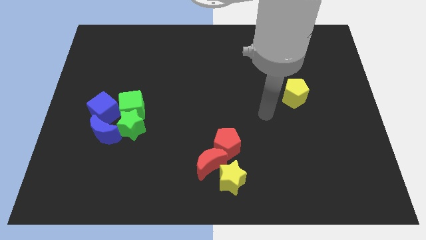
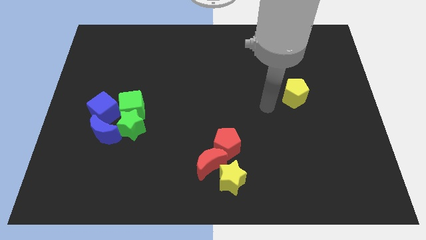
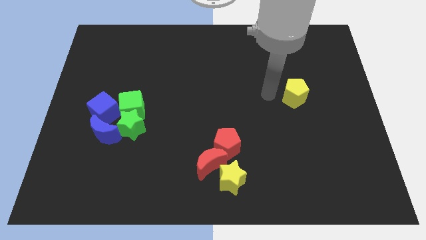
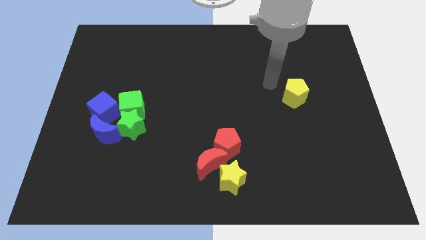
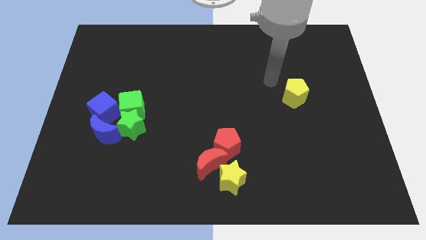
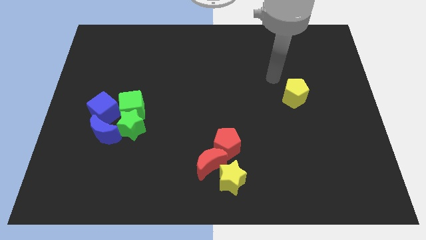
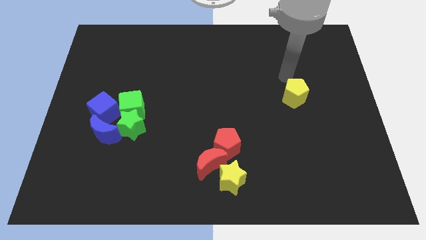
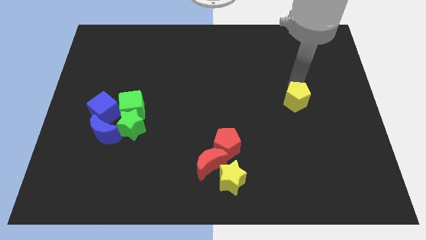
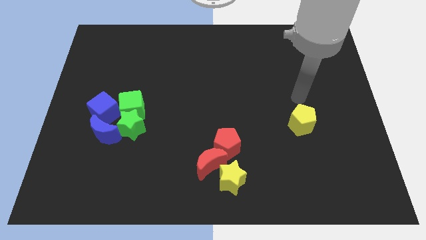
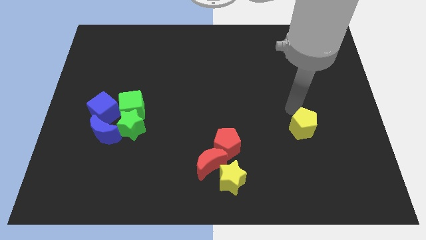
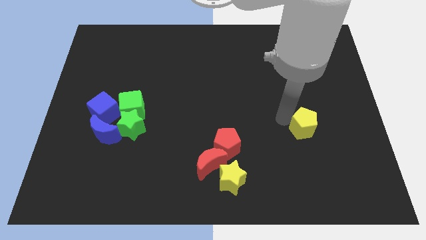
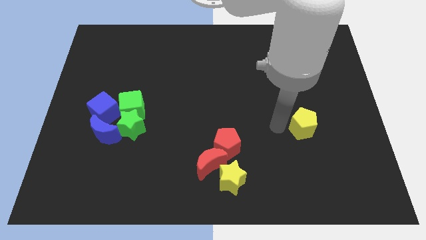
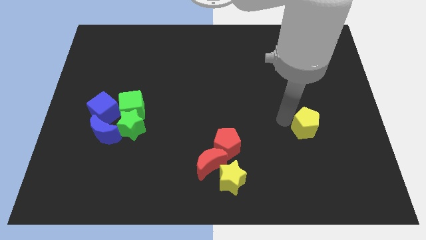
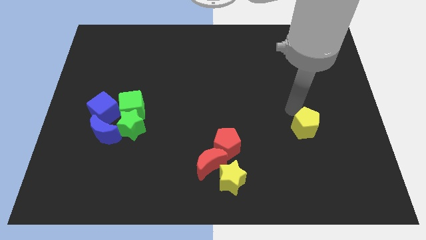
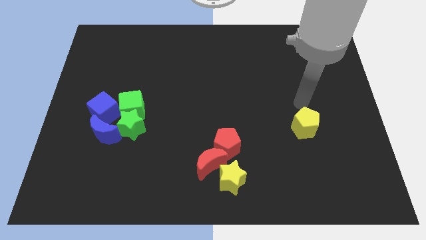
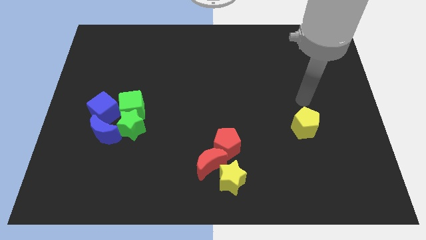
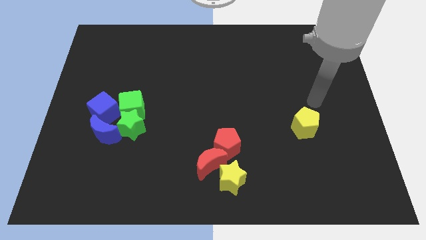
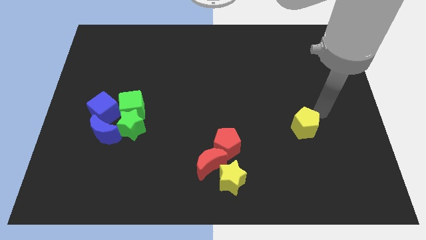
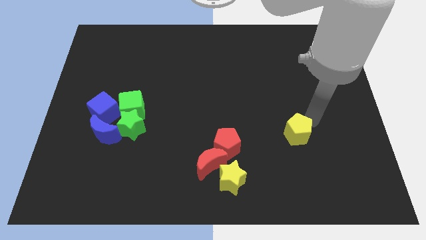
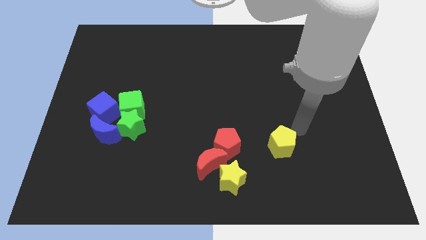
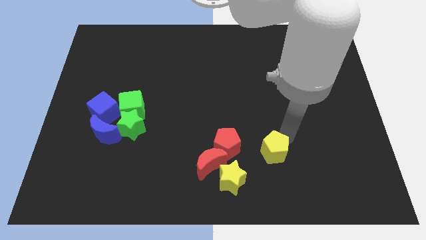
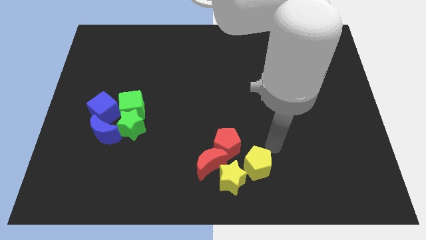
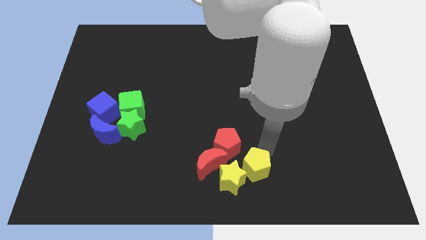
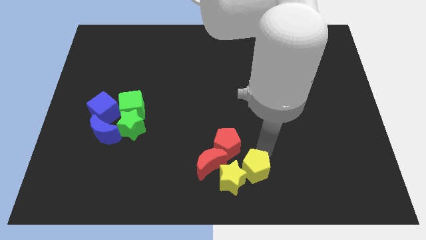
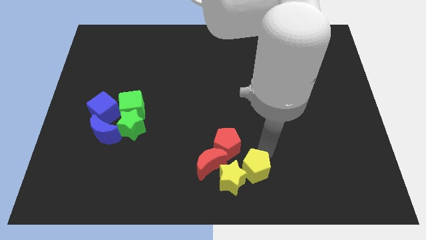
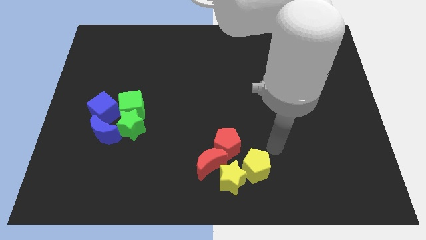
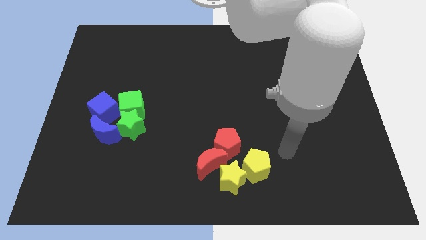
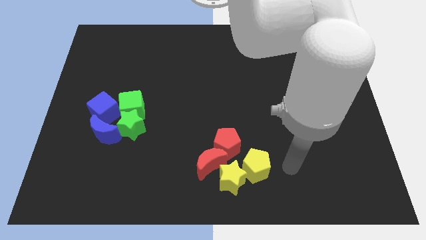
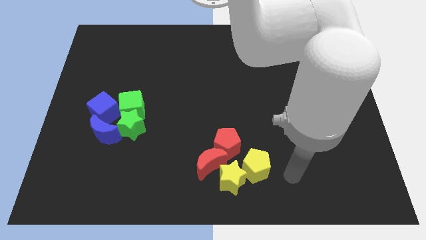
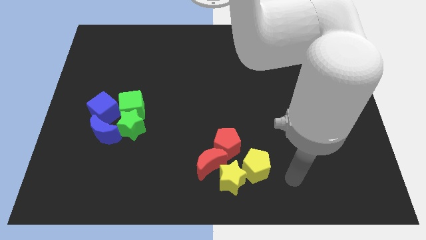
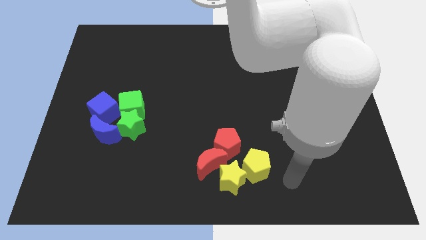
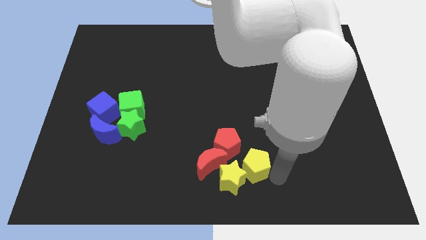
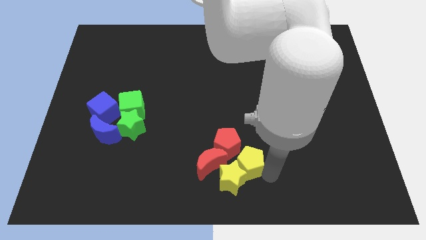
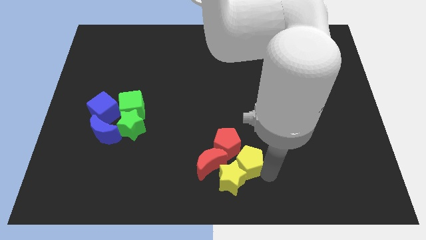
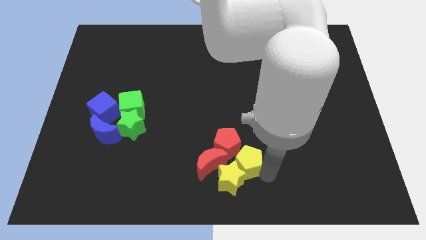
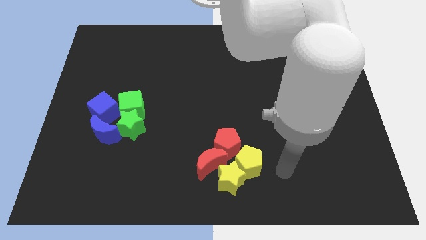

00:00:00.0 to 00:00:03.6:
push yellow pentagon in to yellow star

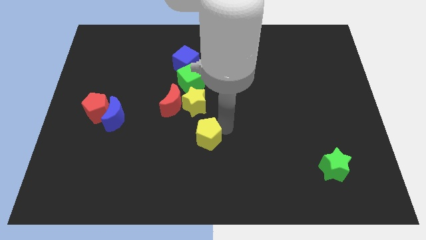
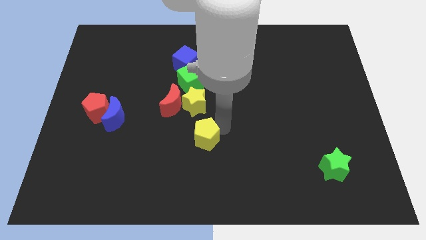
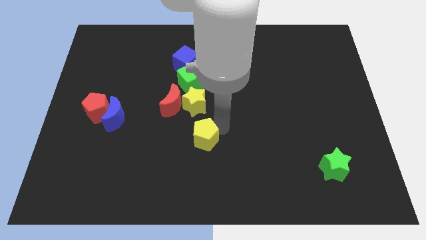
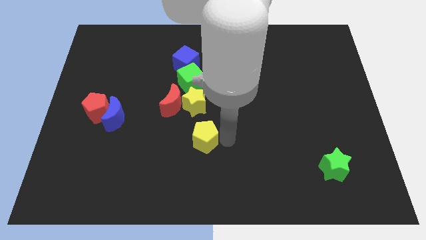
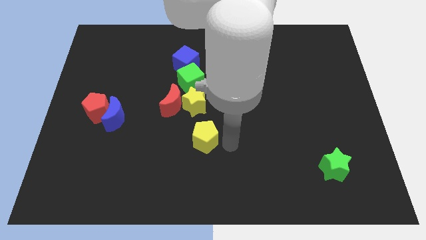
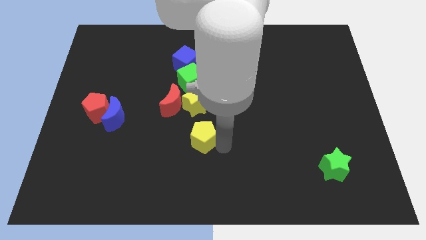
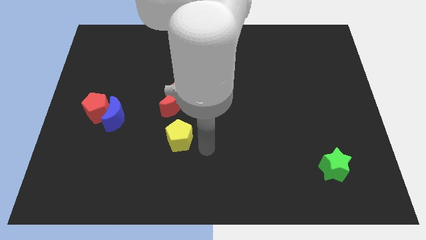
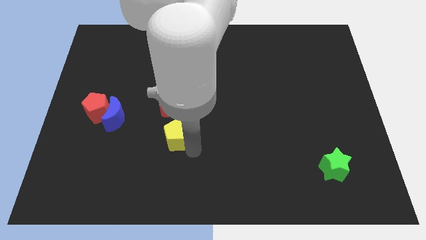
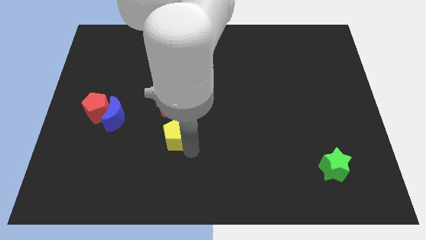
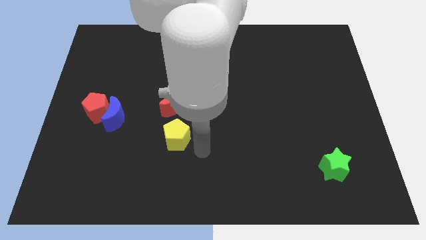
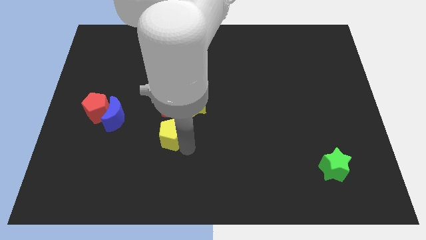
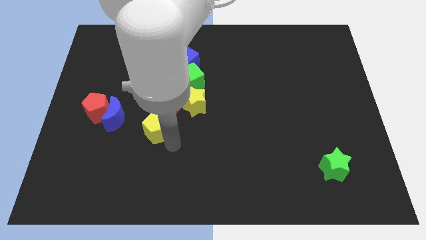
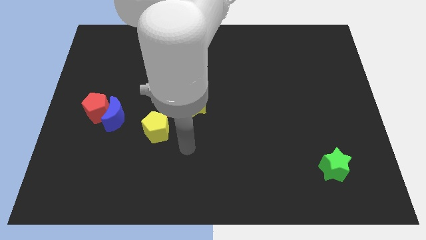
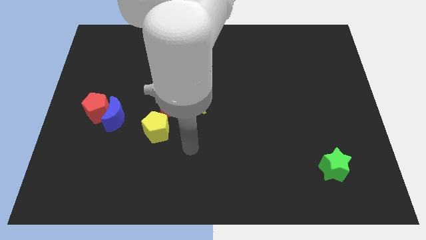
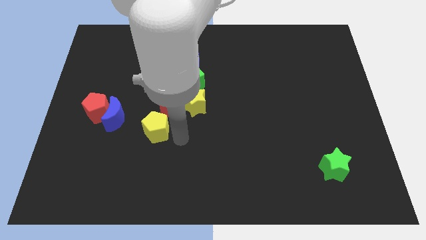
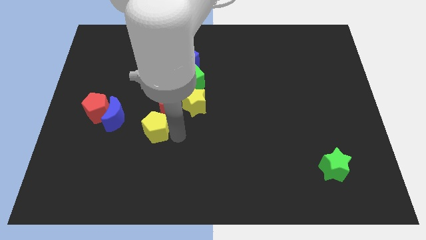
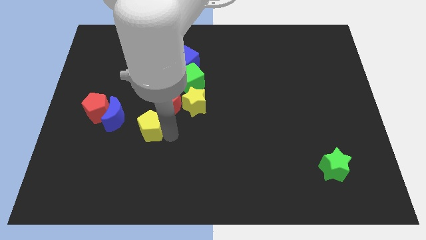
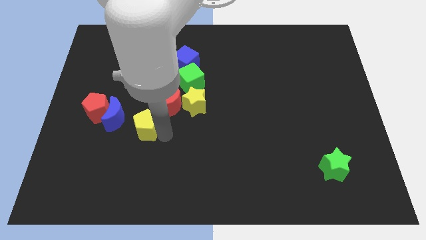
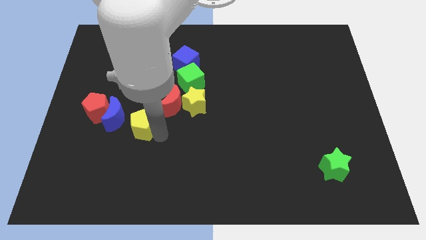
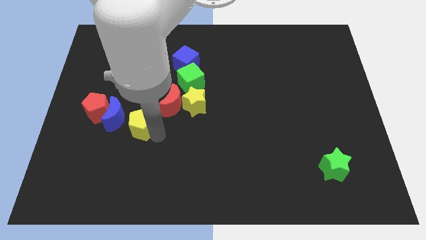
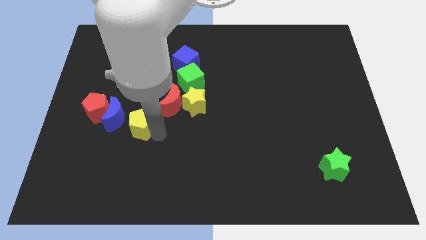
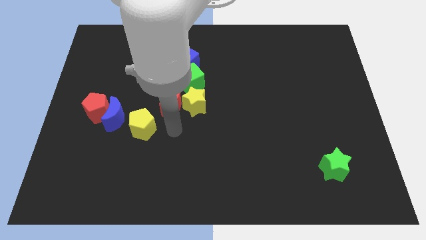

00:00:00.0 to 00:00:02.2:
move the yellow pentagon diagonally to the red moon

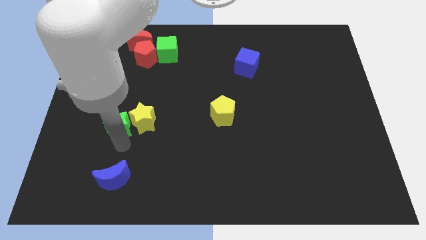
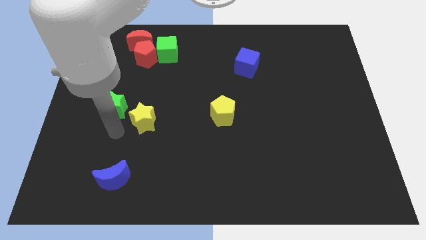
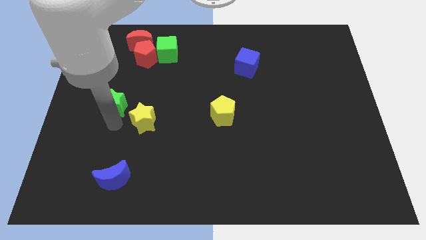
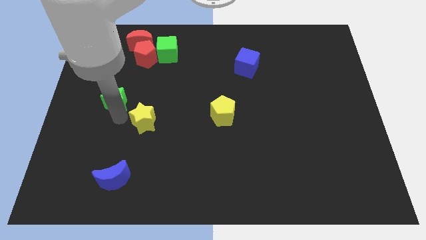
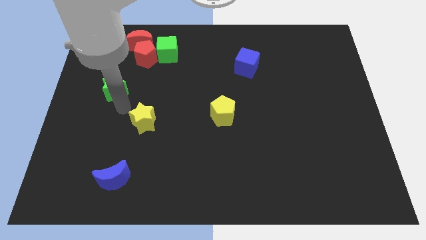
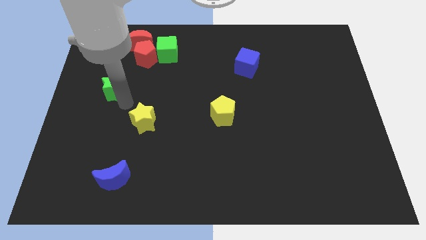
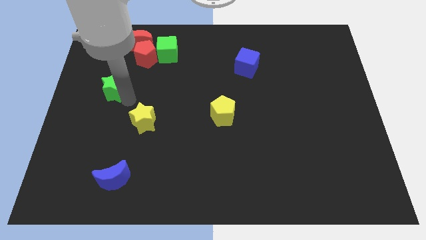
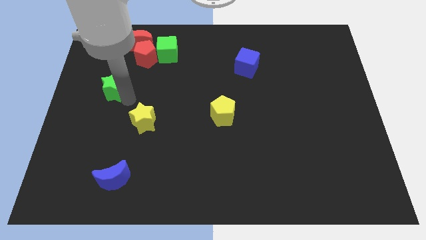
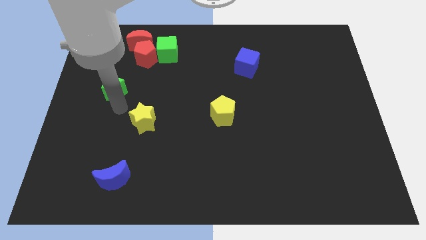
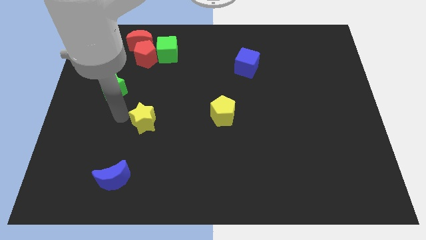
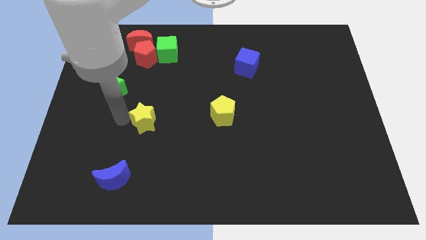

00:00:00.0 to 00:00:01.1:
separate yellow star and green star

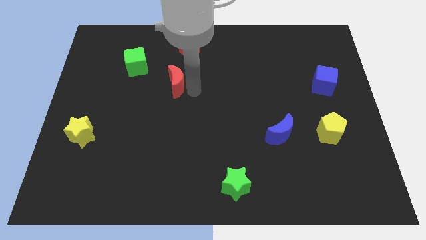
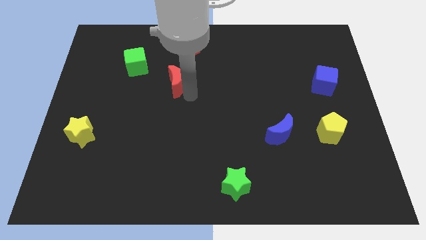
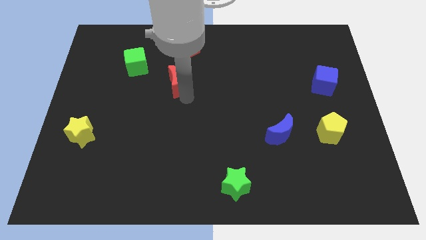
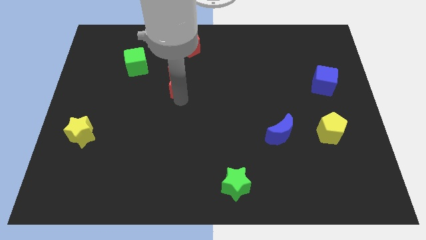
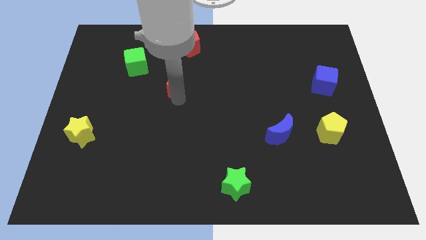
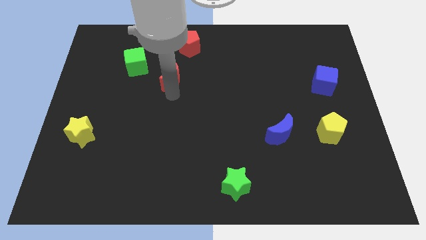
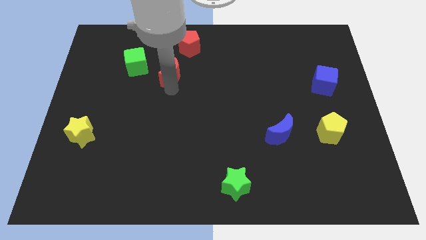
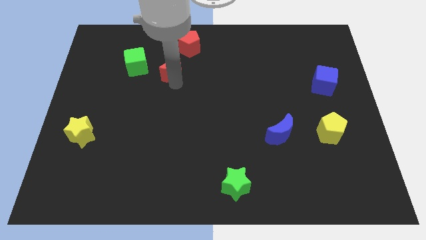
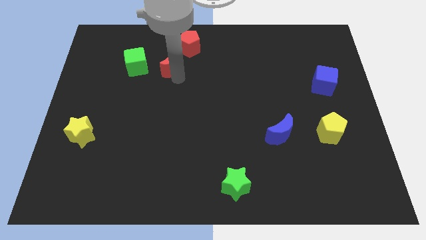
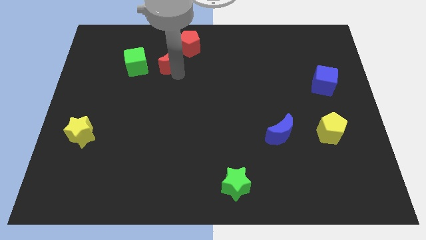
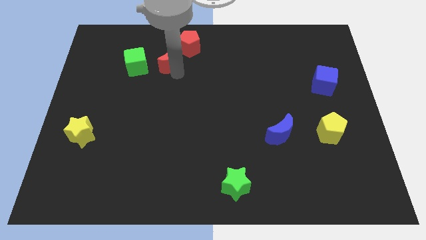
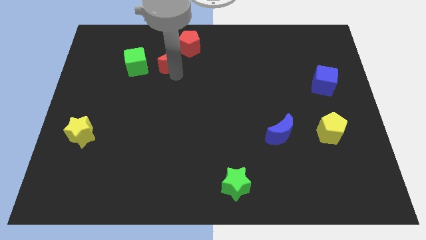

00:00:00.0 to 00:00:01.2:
slide the red moon to the right of the green cube

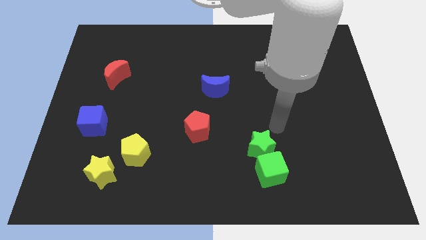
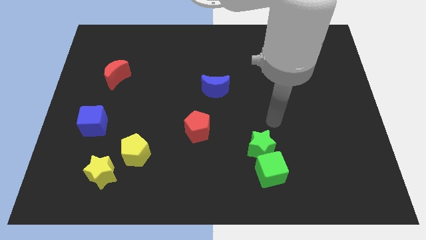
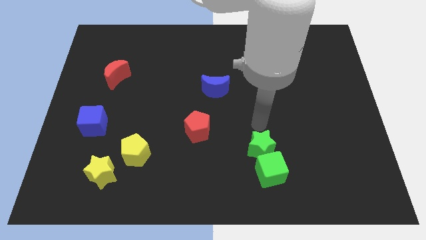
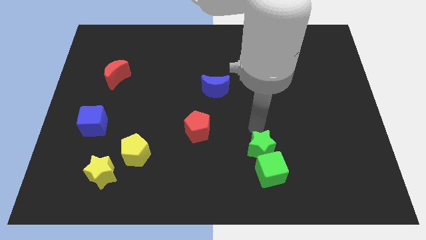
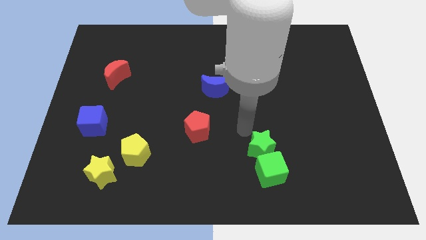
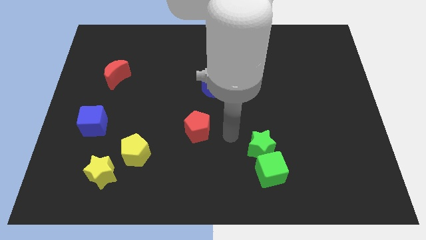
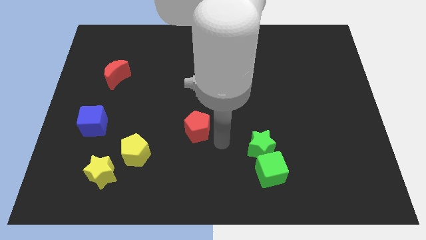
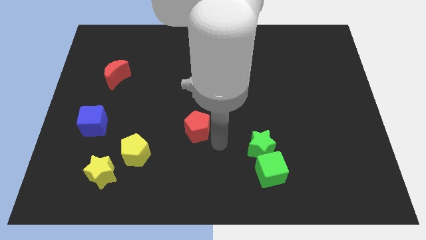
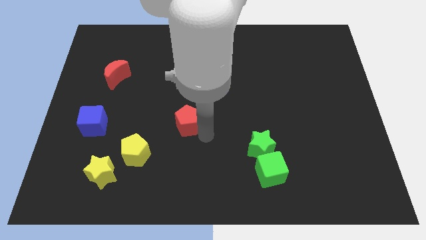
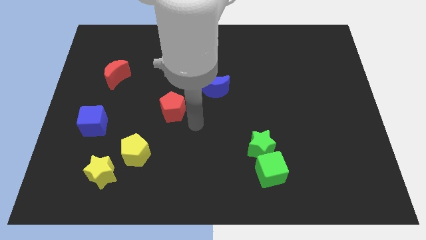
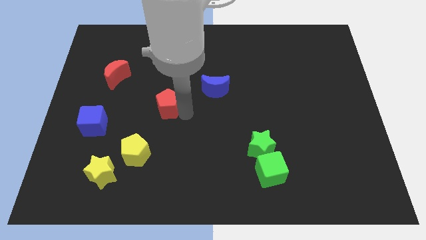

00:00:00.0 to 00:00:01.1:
push the red pentagon slightly upwards of the board
